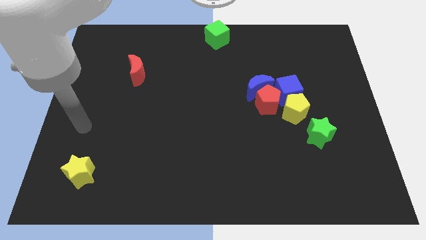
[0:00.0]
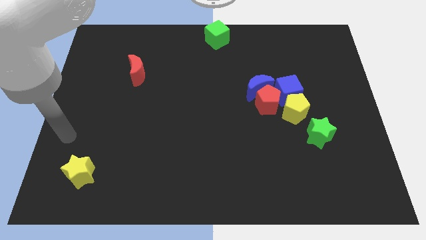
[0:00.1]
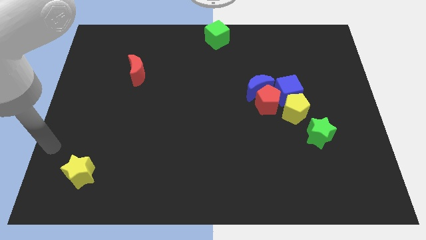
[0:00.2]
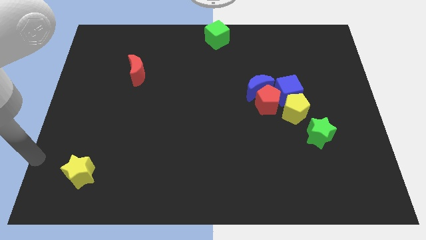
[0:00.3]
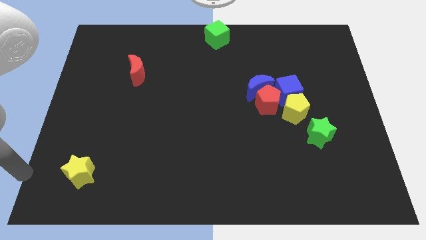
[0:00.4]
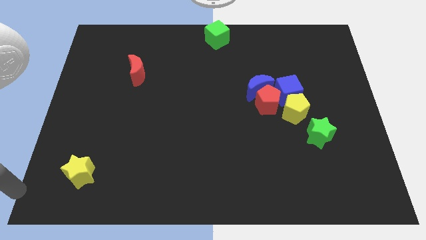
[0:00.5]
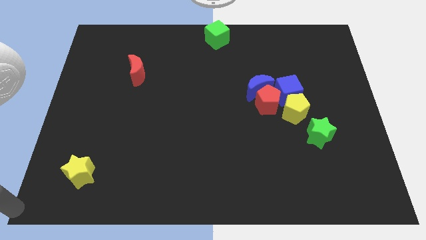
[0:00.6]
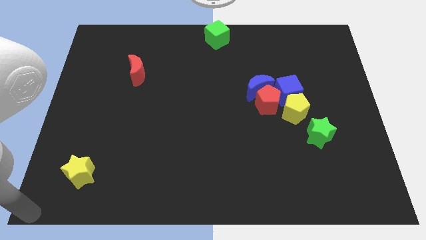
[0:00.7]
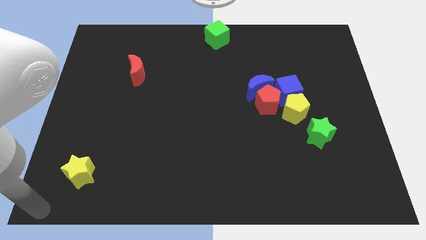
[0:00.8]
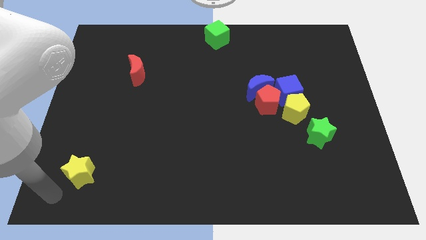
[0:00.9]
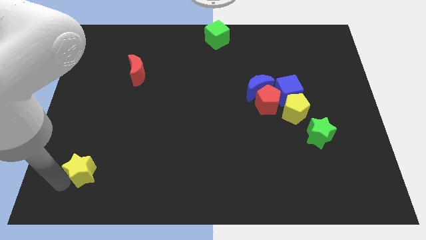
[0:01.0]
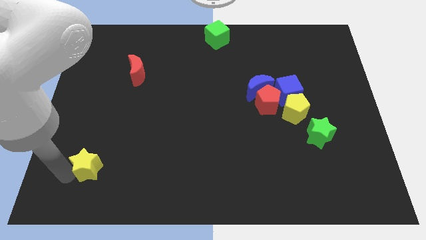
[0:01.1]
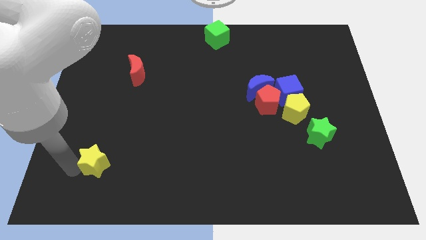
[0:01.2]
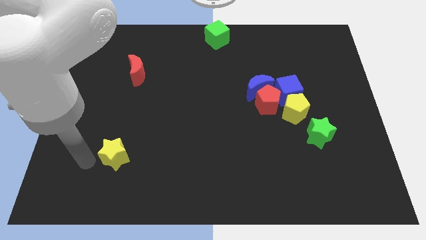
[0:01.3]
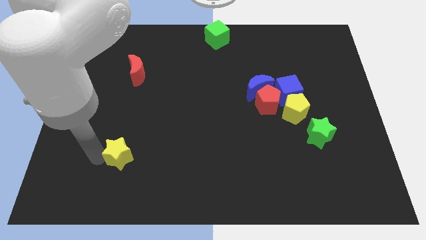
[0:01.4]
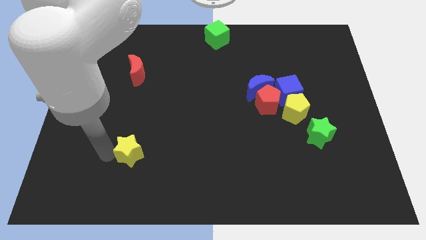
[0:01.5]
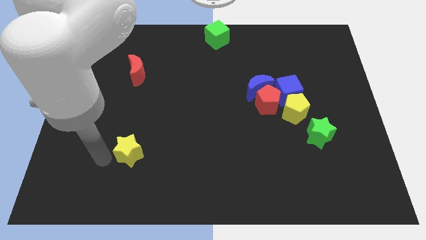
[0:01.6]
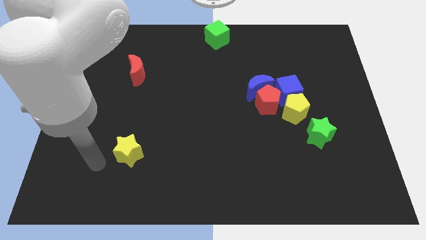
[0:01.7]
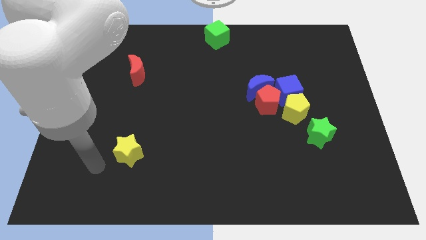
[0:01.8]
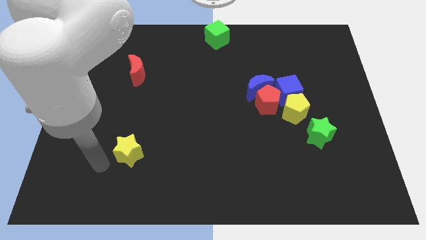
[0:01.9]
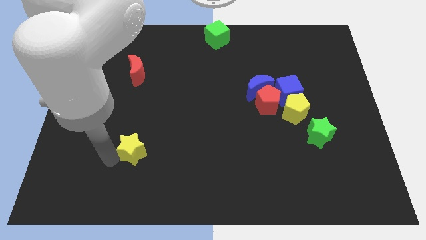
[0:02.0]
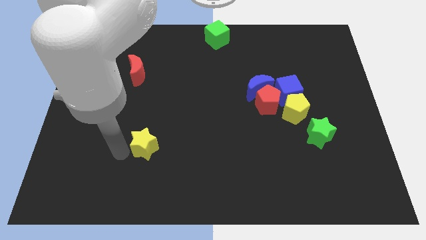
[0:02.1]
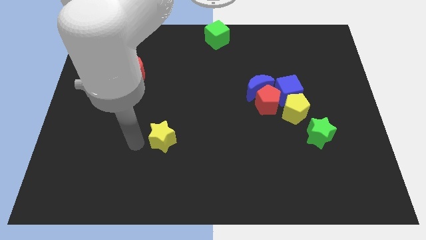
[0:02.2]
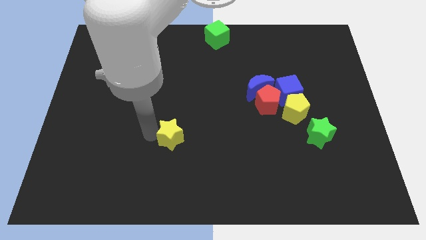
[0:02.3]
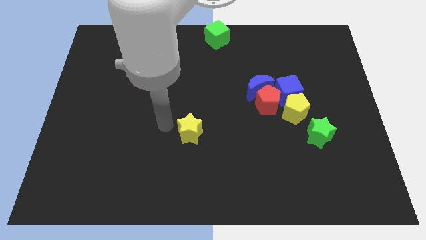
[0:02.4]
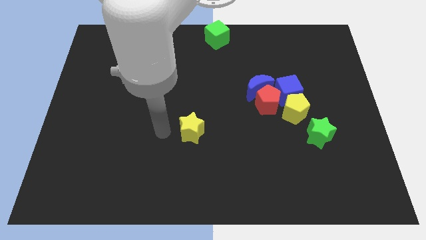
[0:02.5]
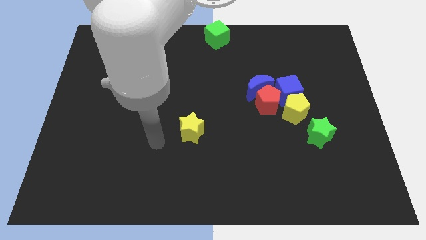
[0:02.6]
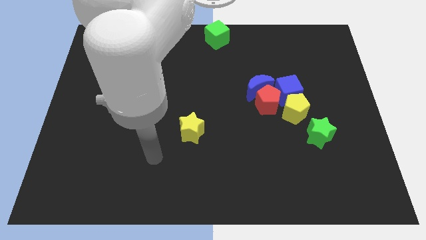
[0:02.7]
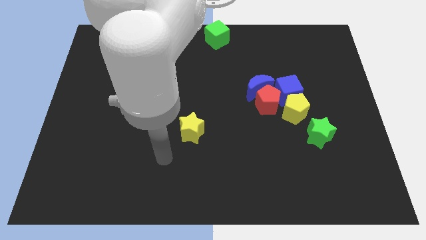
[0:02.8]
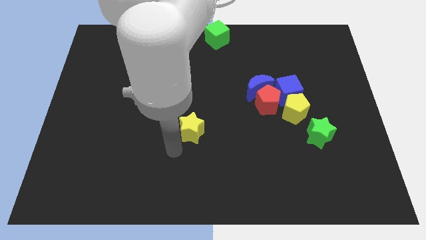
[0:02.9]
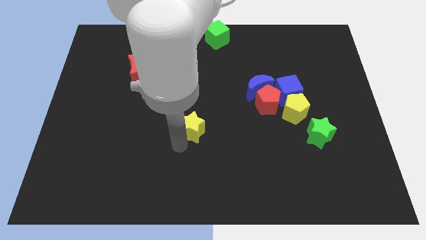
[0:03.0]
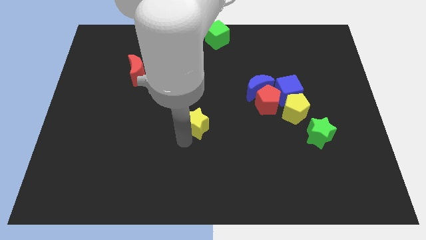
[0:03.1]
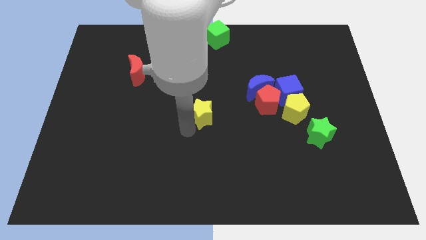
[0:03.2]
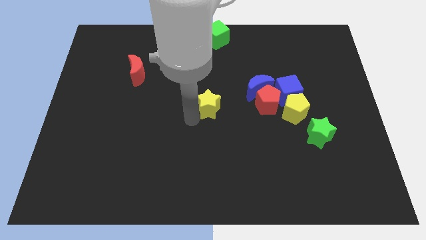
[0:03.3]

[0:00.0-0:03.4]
move the yellow star diagonally to the red pentagon

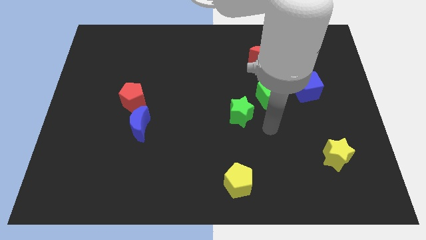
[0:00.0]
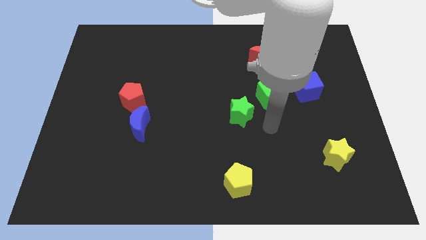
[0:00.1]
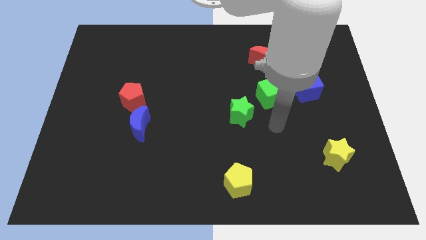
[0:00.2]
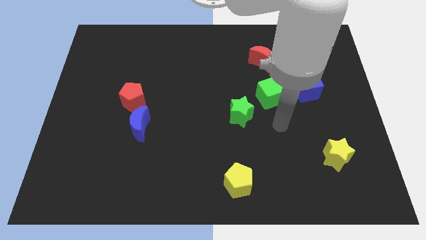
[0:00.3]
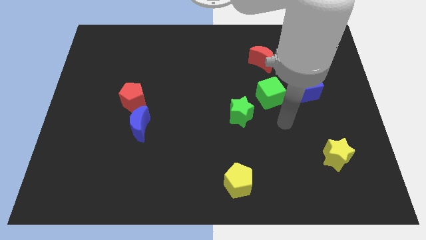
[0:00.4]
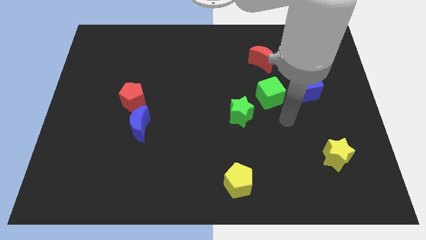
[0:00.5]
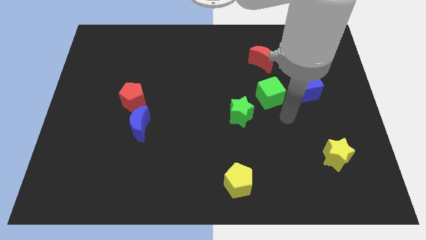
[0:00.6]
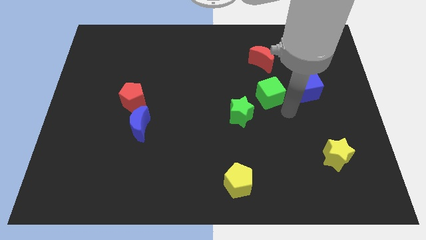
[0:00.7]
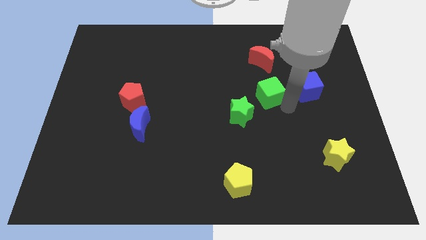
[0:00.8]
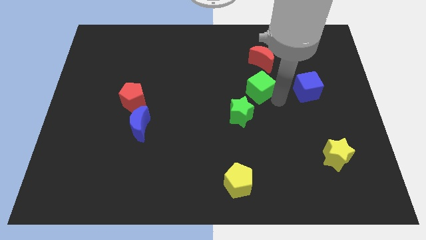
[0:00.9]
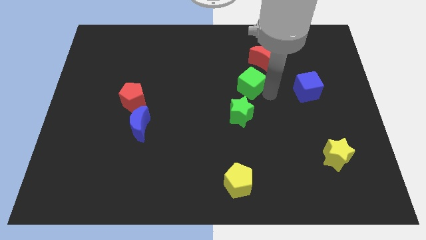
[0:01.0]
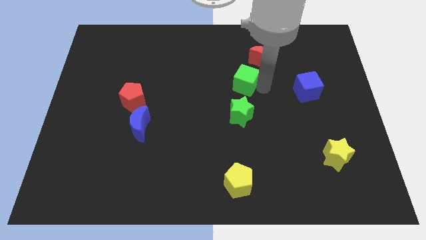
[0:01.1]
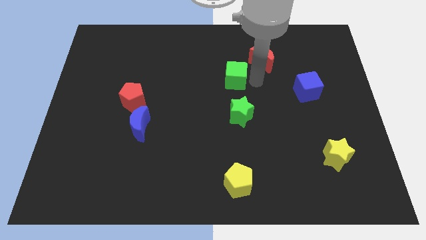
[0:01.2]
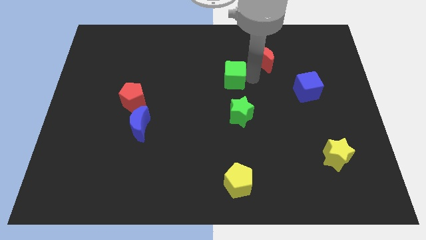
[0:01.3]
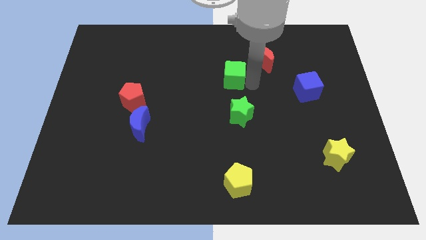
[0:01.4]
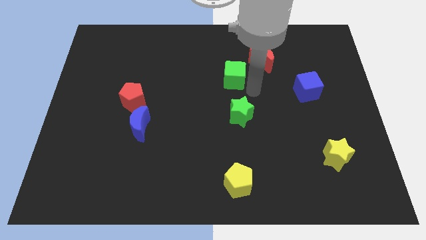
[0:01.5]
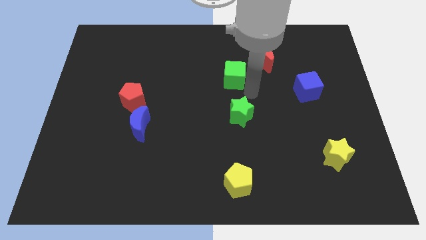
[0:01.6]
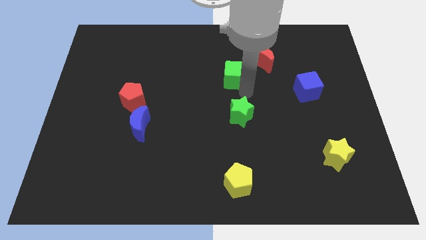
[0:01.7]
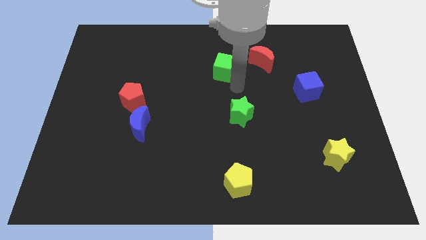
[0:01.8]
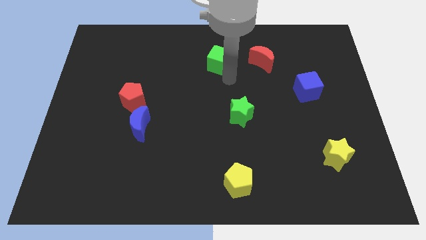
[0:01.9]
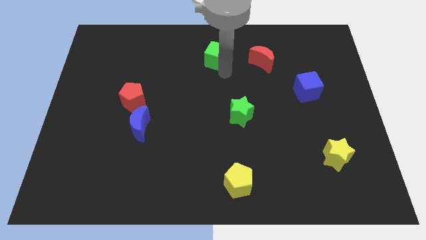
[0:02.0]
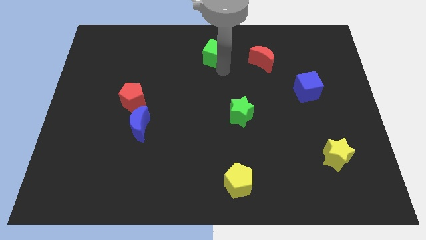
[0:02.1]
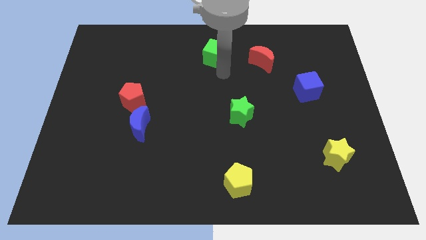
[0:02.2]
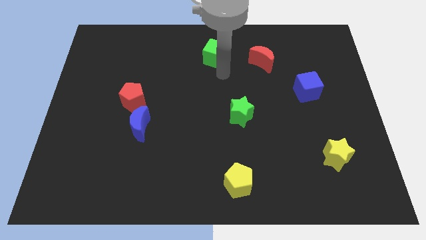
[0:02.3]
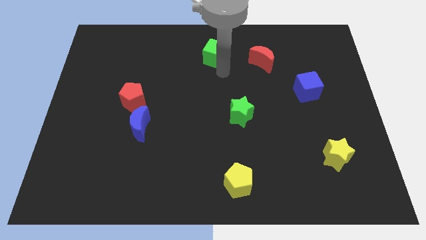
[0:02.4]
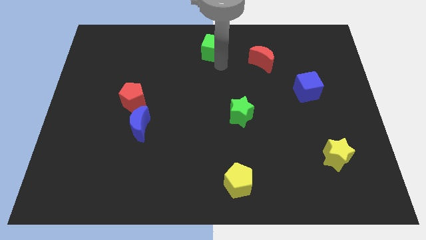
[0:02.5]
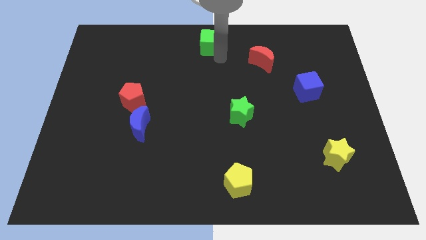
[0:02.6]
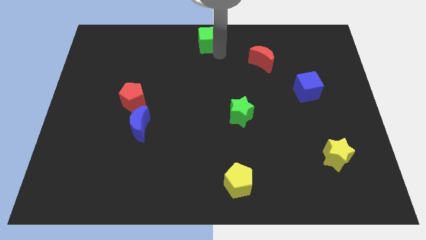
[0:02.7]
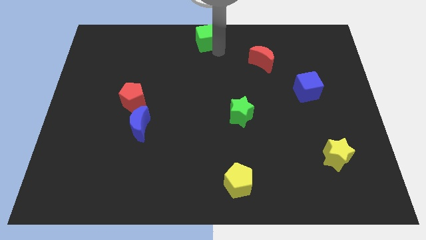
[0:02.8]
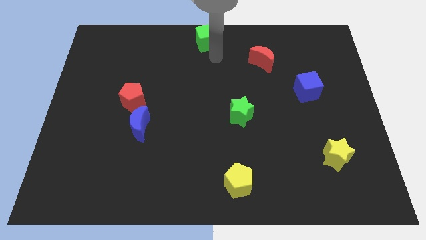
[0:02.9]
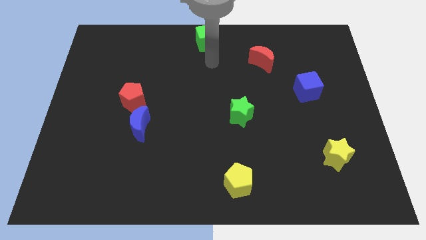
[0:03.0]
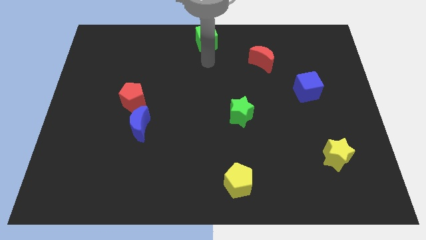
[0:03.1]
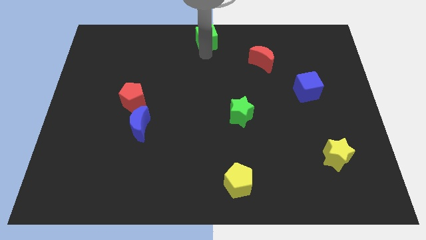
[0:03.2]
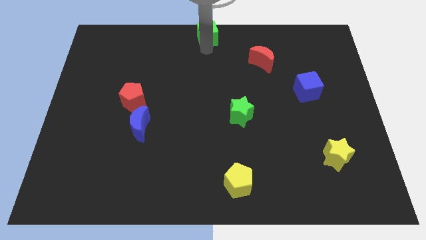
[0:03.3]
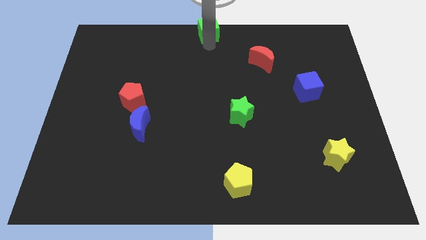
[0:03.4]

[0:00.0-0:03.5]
place the green cube at the top center of the board

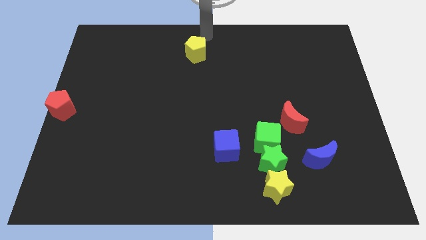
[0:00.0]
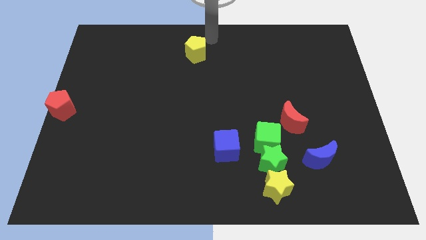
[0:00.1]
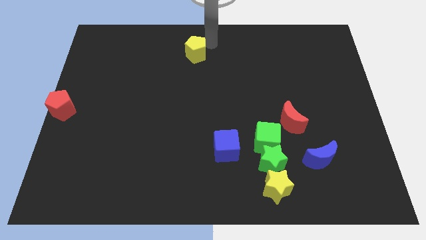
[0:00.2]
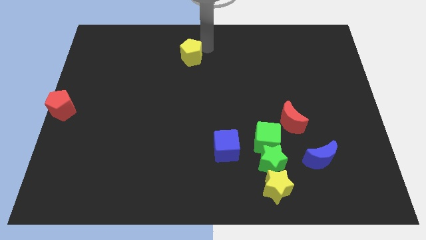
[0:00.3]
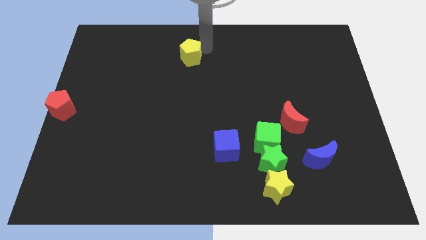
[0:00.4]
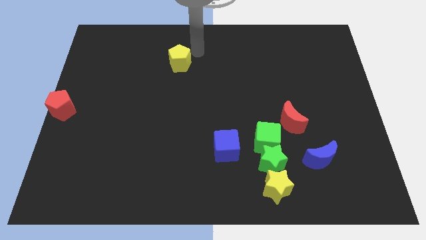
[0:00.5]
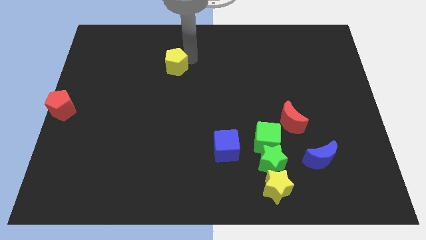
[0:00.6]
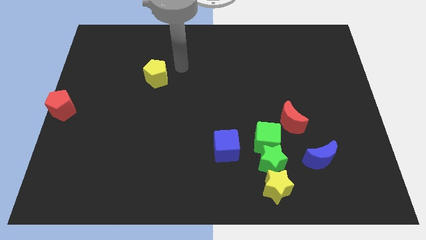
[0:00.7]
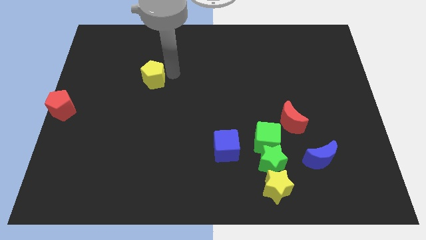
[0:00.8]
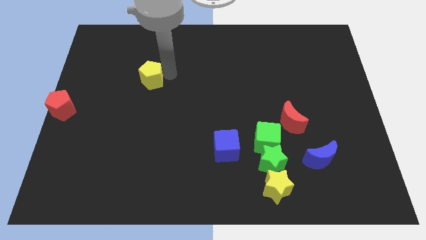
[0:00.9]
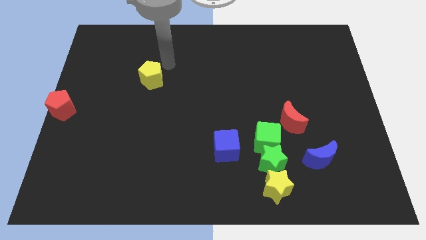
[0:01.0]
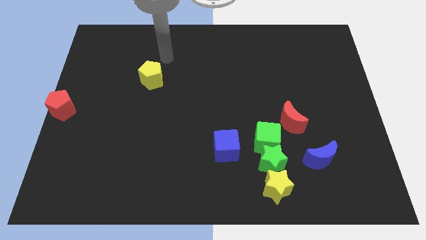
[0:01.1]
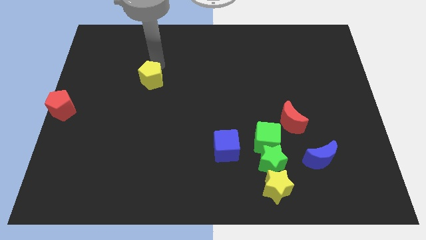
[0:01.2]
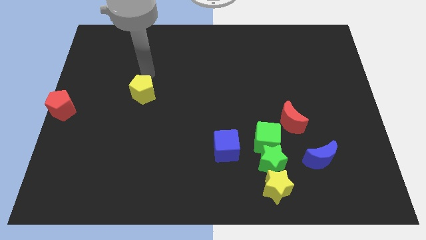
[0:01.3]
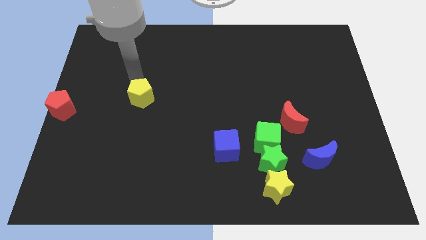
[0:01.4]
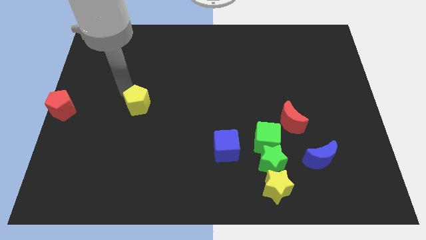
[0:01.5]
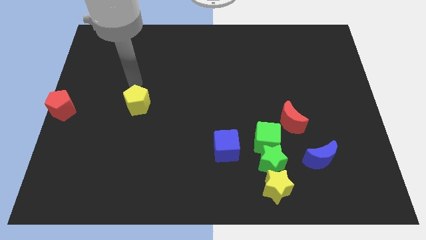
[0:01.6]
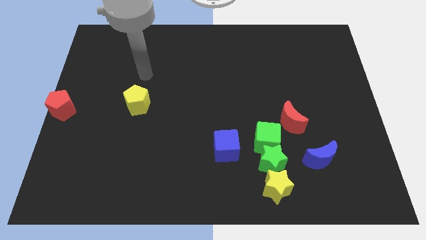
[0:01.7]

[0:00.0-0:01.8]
place the yellow pentagon parallel to red pentagon

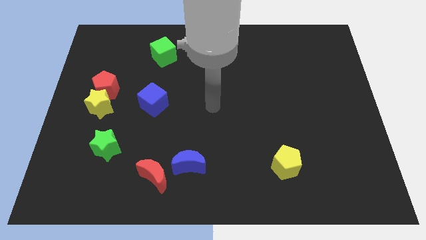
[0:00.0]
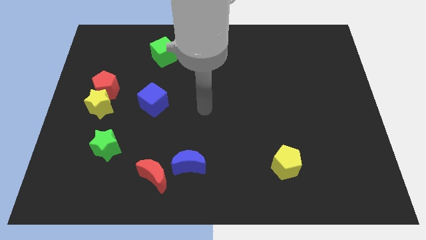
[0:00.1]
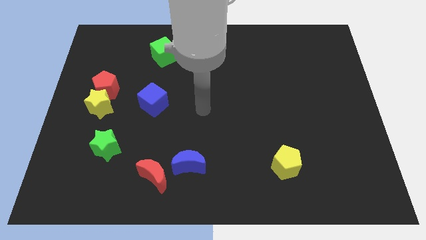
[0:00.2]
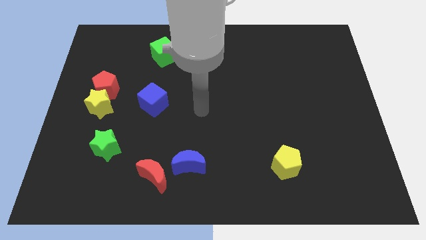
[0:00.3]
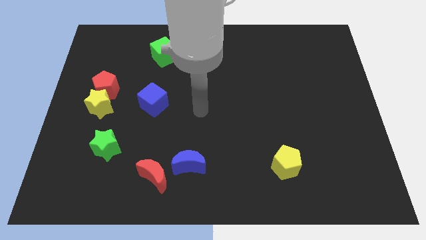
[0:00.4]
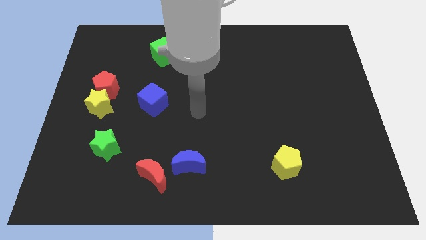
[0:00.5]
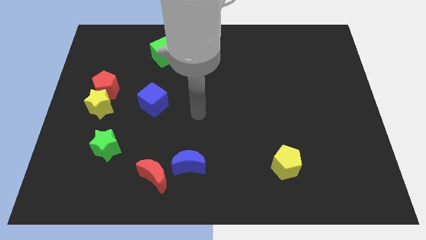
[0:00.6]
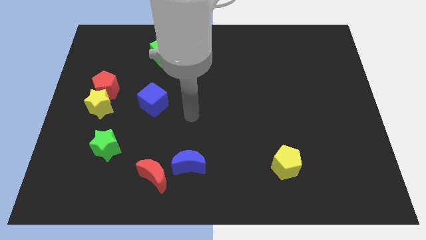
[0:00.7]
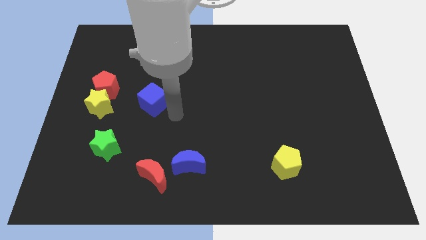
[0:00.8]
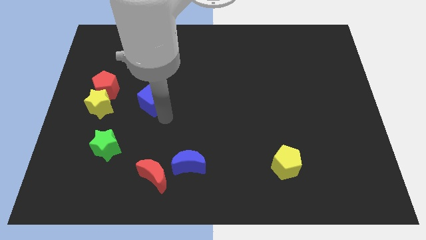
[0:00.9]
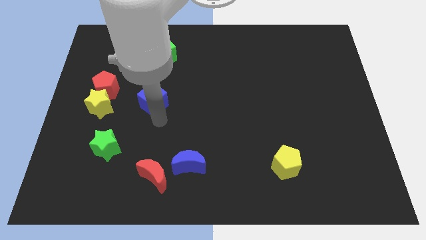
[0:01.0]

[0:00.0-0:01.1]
place the arm in between the blue cube and blue moon
